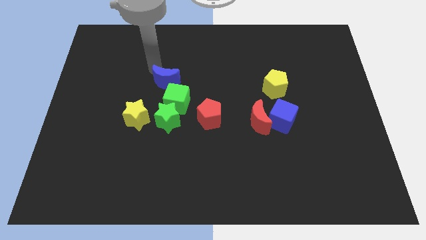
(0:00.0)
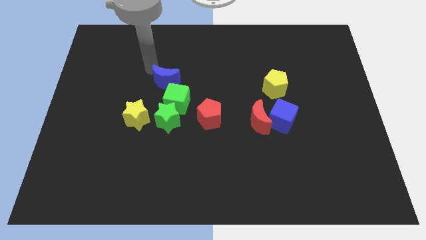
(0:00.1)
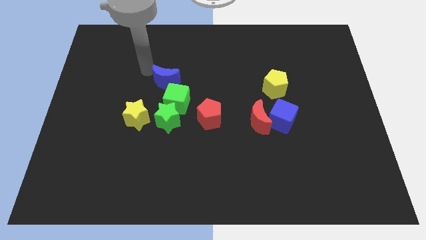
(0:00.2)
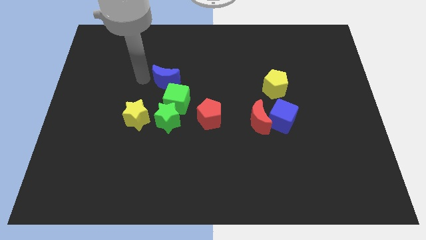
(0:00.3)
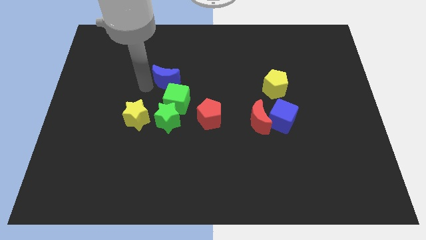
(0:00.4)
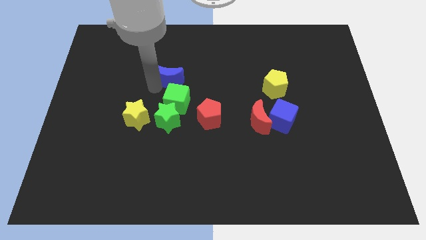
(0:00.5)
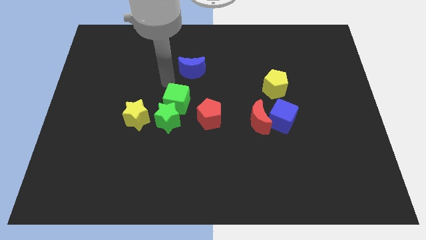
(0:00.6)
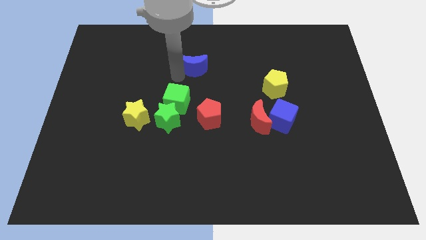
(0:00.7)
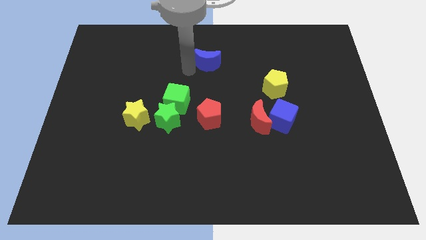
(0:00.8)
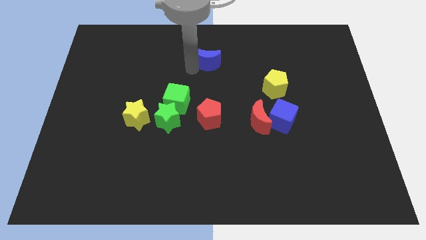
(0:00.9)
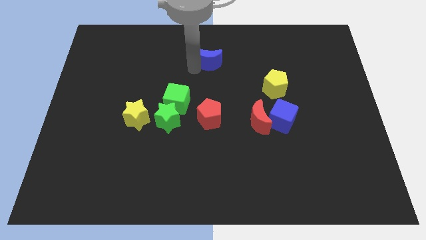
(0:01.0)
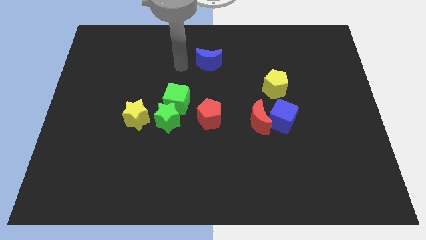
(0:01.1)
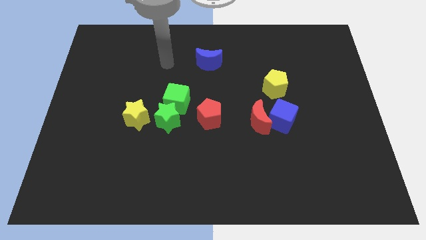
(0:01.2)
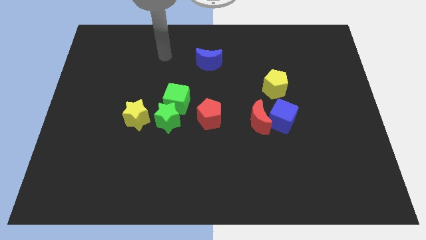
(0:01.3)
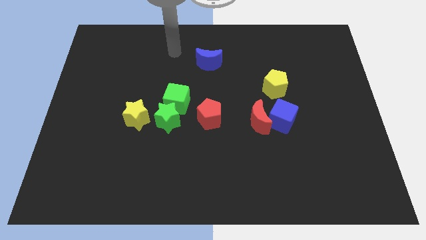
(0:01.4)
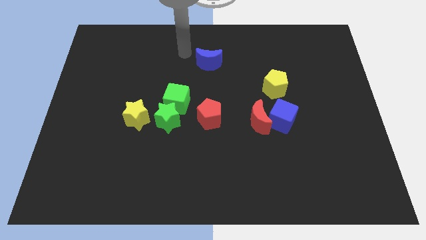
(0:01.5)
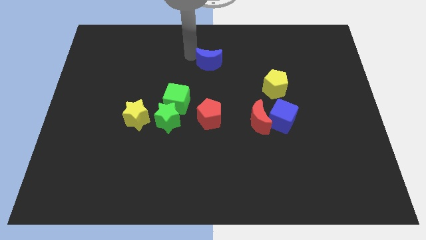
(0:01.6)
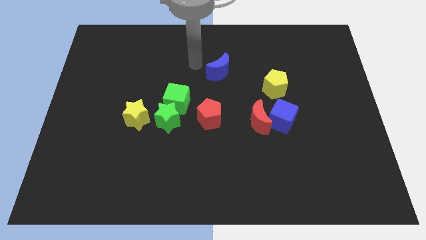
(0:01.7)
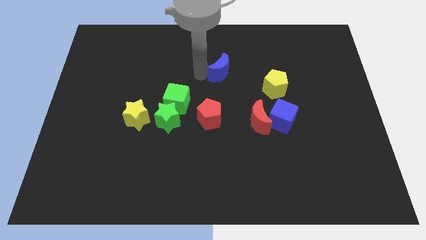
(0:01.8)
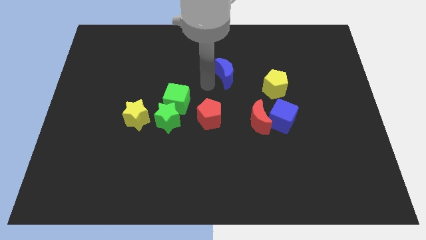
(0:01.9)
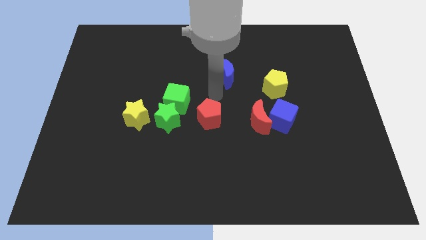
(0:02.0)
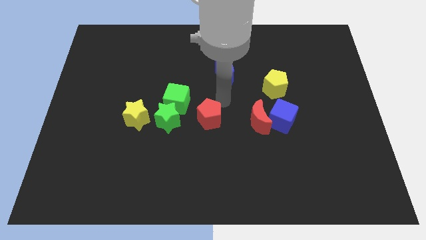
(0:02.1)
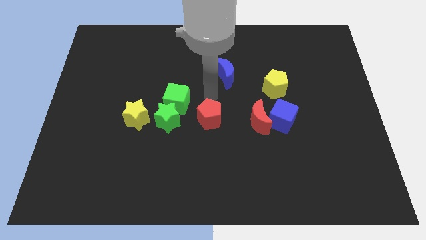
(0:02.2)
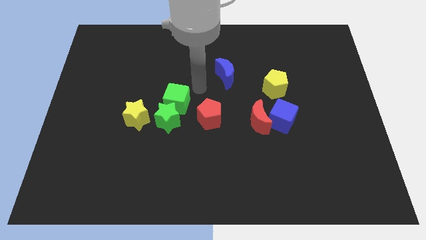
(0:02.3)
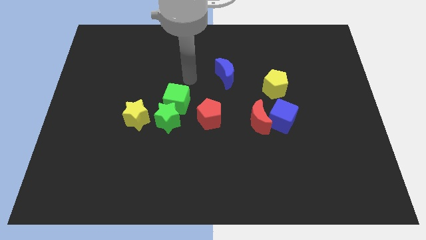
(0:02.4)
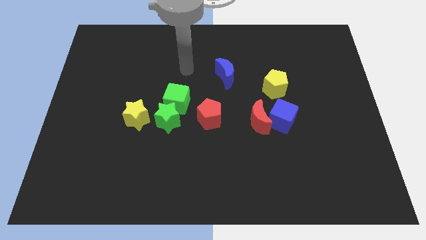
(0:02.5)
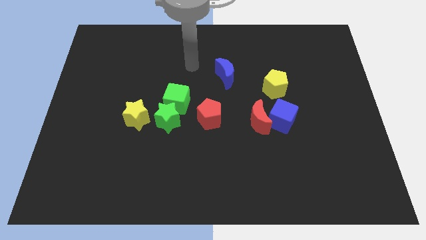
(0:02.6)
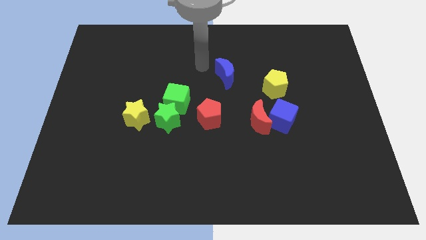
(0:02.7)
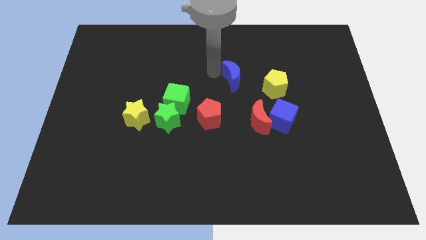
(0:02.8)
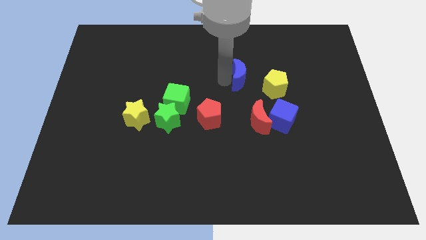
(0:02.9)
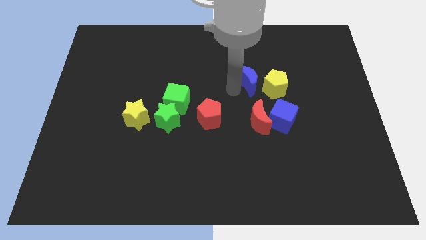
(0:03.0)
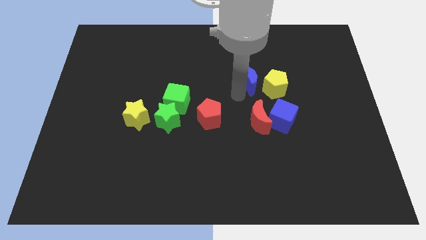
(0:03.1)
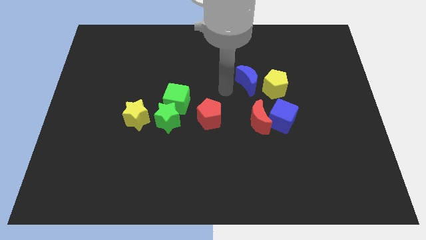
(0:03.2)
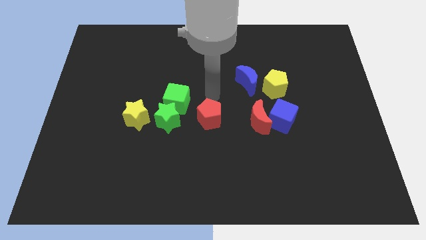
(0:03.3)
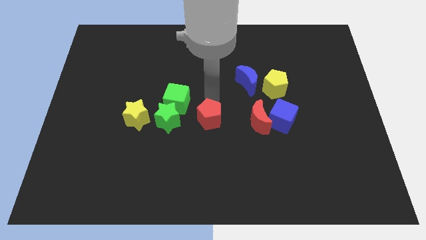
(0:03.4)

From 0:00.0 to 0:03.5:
move the blue moon left to the yellow pentagon

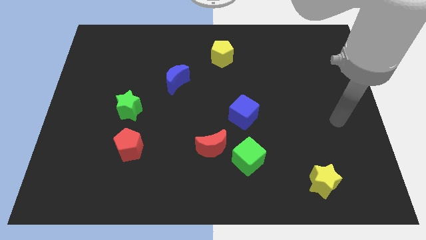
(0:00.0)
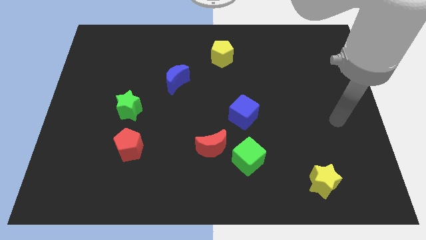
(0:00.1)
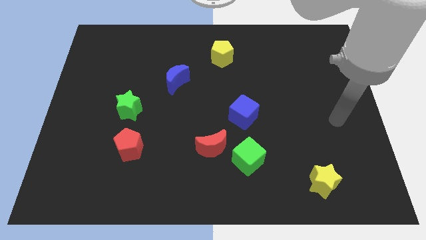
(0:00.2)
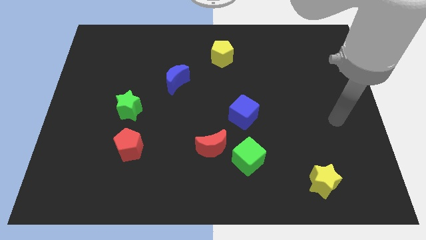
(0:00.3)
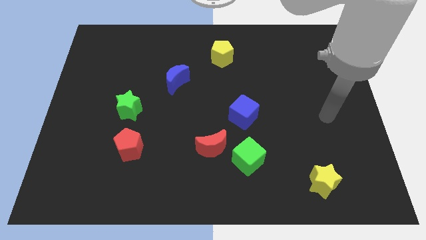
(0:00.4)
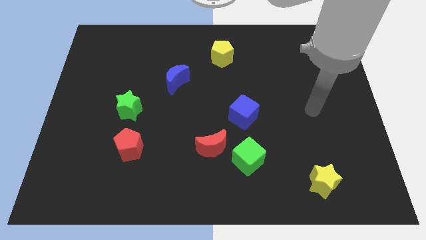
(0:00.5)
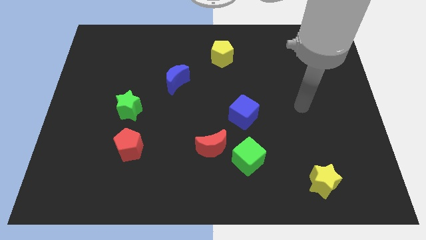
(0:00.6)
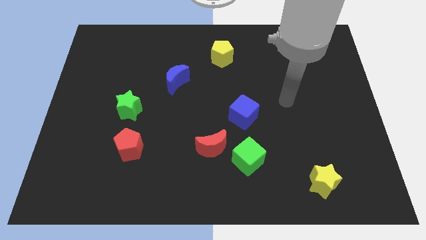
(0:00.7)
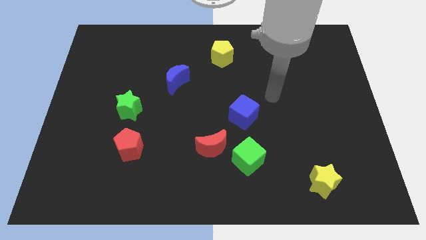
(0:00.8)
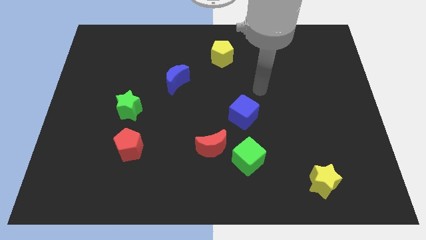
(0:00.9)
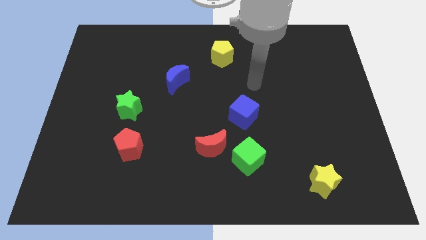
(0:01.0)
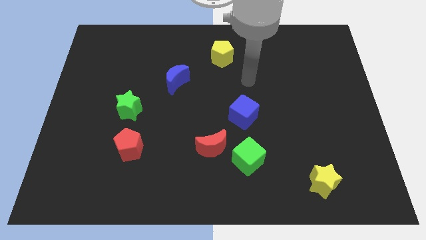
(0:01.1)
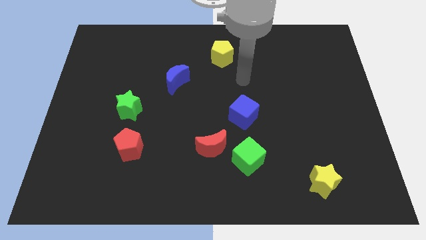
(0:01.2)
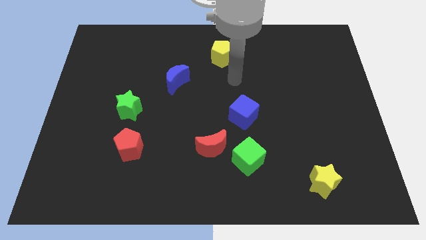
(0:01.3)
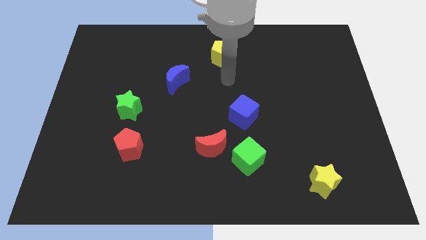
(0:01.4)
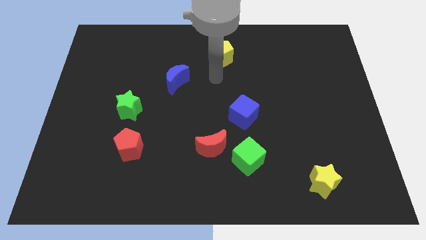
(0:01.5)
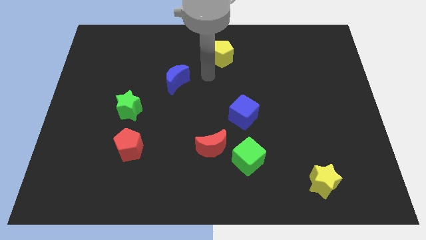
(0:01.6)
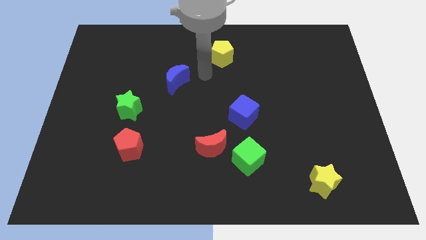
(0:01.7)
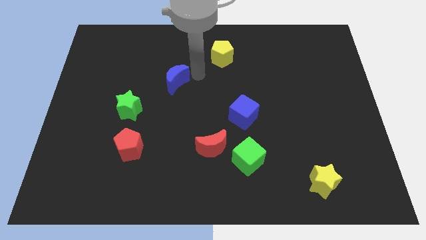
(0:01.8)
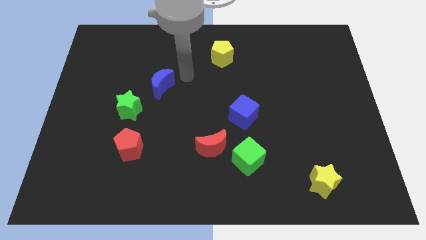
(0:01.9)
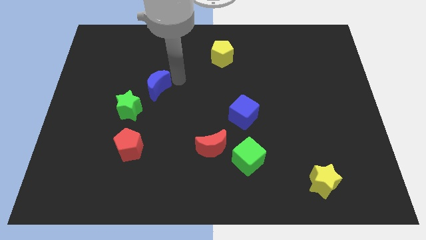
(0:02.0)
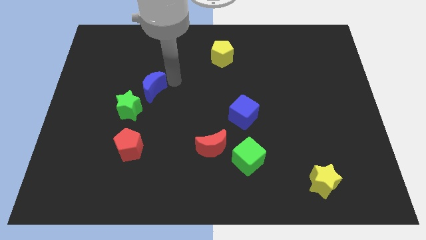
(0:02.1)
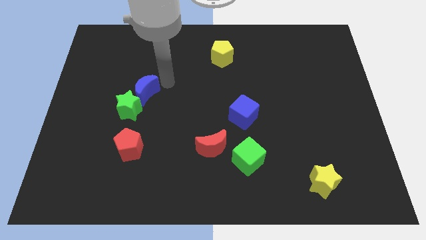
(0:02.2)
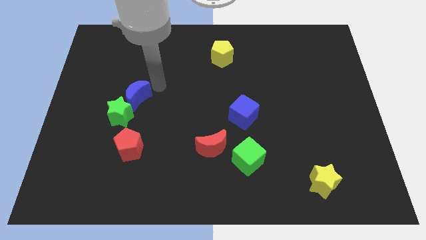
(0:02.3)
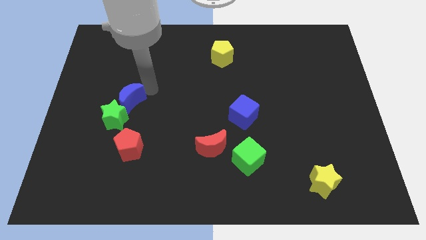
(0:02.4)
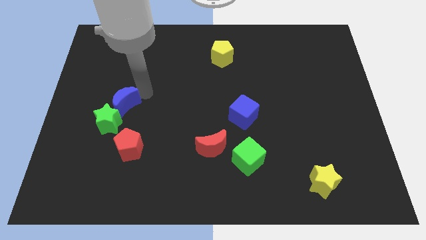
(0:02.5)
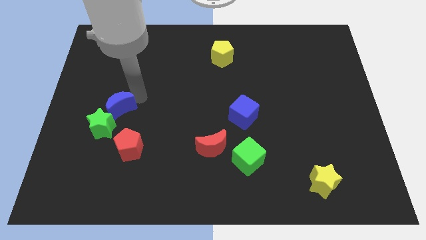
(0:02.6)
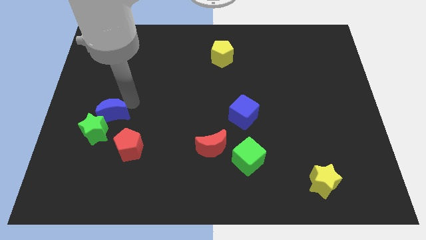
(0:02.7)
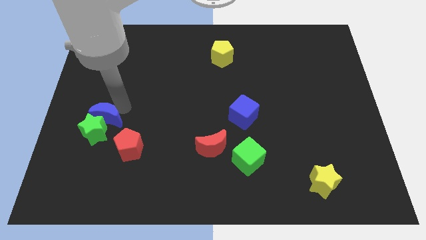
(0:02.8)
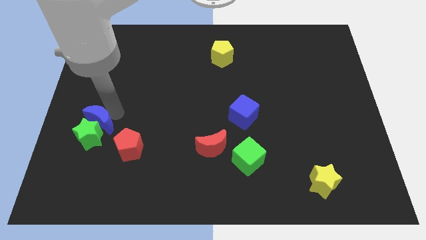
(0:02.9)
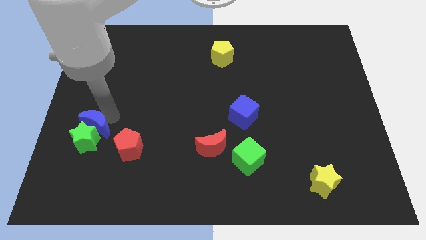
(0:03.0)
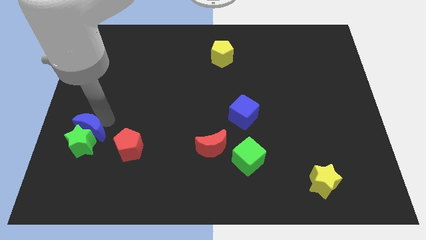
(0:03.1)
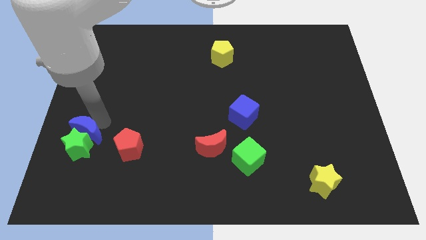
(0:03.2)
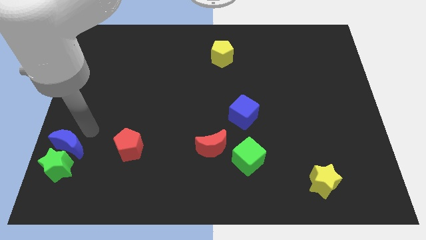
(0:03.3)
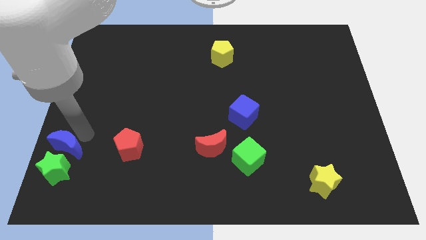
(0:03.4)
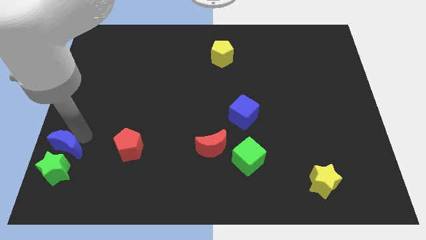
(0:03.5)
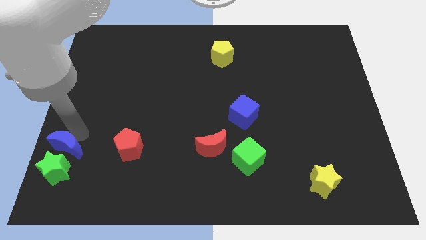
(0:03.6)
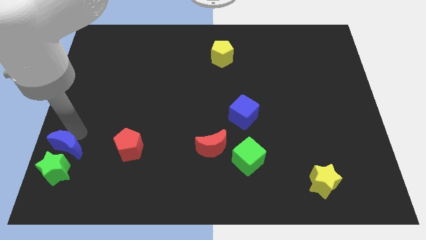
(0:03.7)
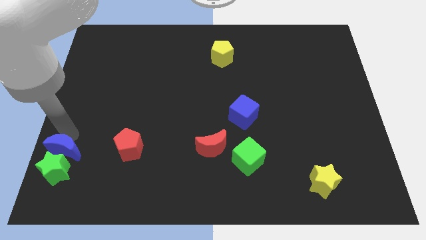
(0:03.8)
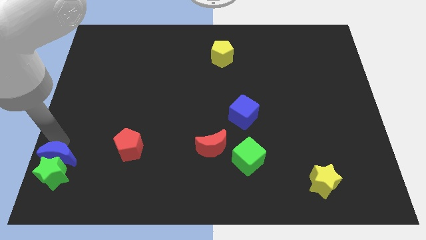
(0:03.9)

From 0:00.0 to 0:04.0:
push blue moon and green star towards the bottom left corner of the board

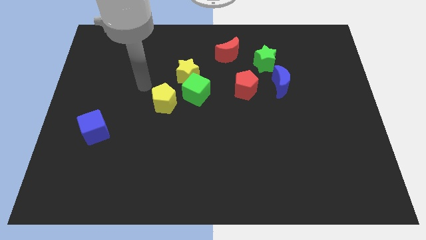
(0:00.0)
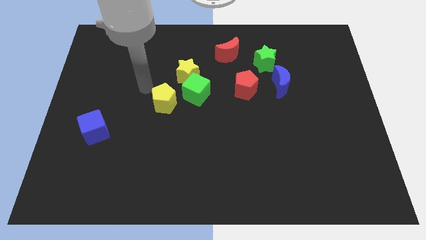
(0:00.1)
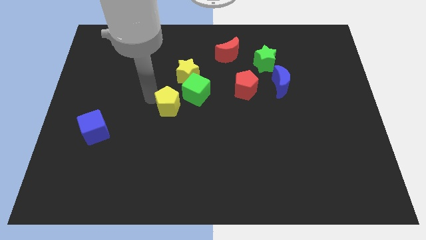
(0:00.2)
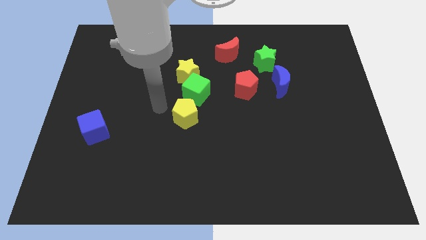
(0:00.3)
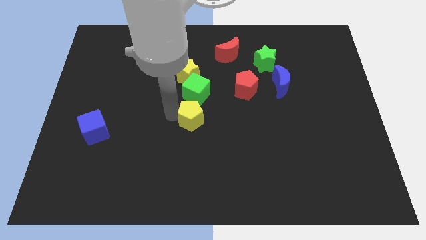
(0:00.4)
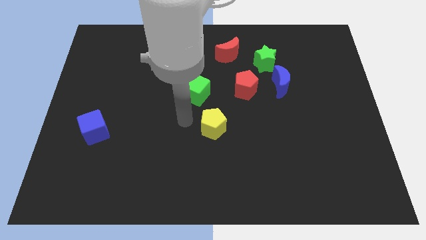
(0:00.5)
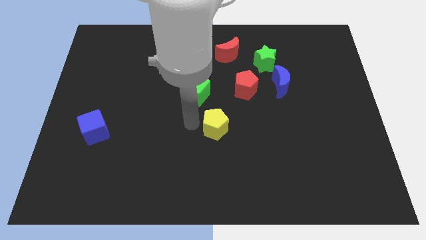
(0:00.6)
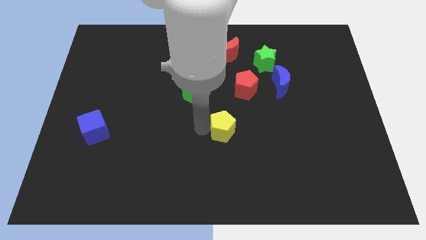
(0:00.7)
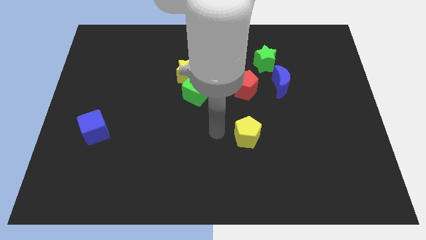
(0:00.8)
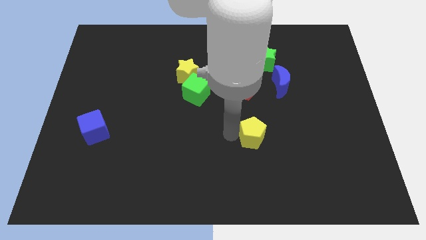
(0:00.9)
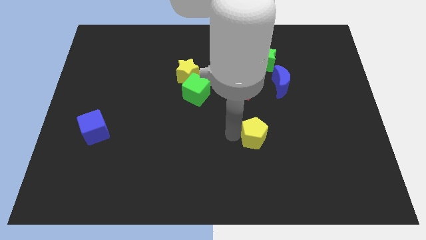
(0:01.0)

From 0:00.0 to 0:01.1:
place the yellow pentagon below the red pentagon

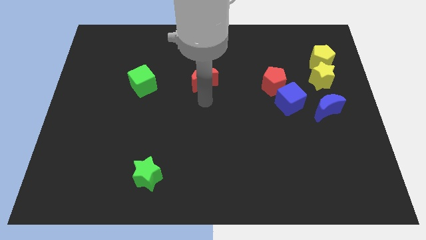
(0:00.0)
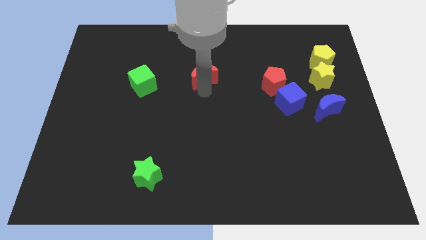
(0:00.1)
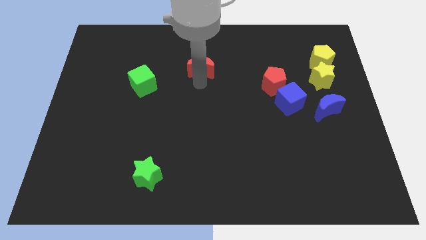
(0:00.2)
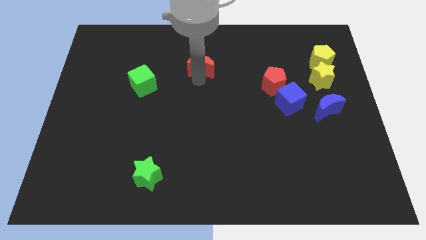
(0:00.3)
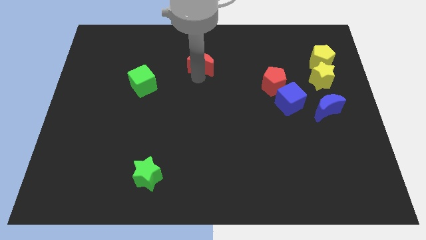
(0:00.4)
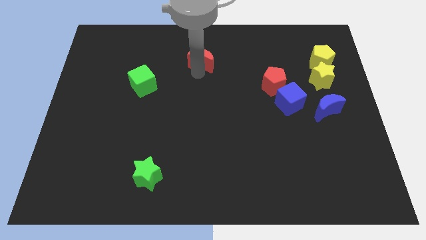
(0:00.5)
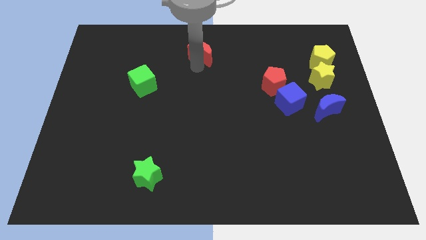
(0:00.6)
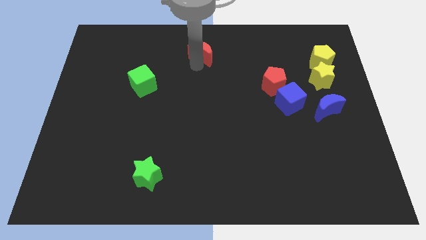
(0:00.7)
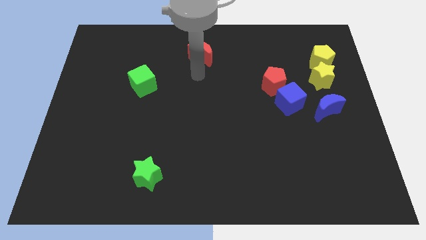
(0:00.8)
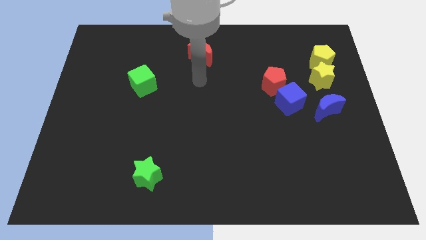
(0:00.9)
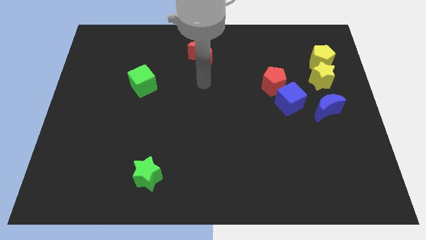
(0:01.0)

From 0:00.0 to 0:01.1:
push the red crescent to the top center of the board
